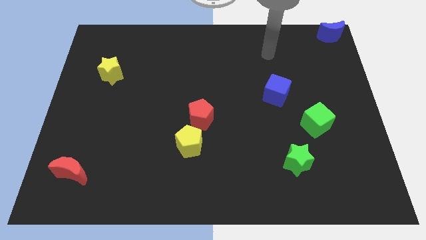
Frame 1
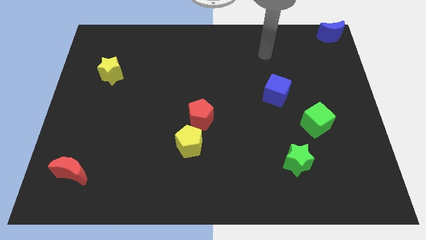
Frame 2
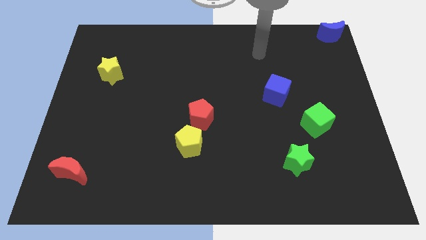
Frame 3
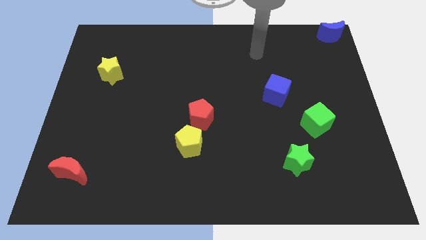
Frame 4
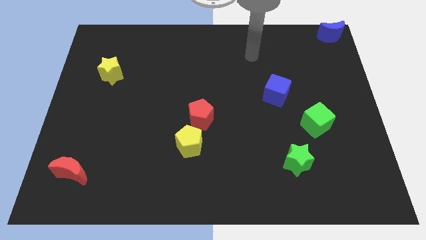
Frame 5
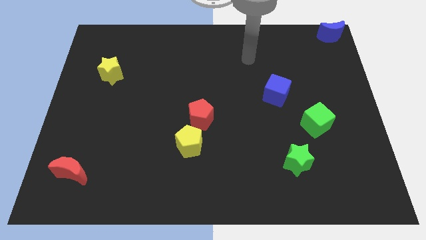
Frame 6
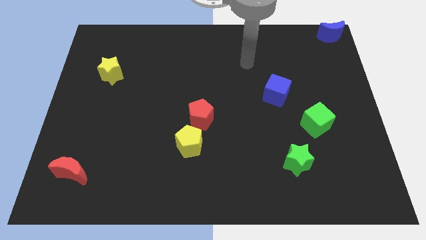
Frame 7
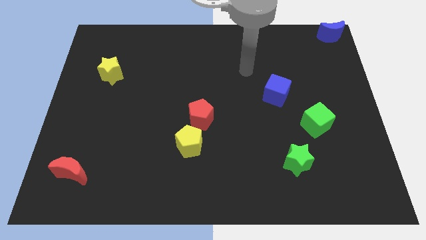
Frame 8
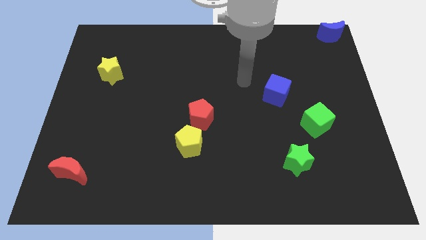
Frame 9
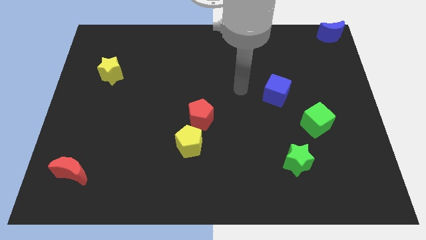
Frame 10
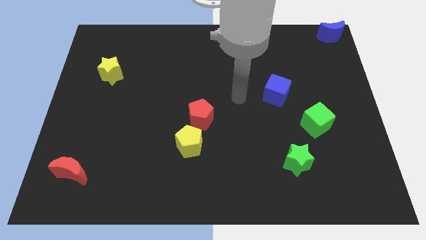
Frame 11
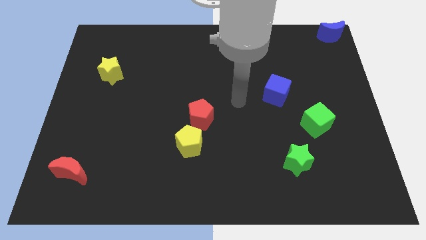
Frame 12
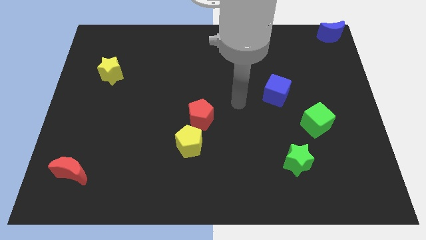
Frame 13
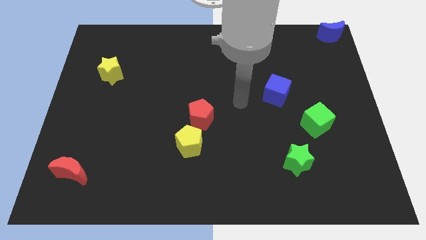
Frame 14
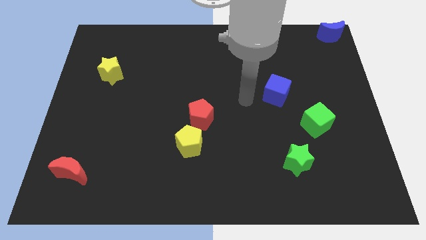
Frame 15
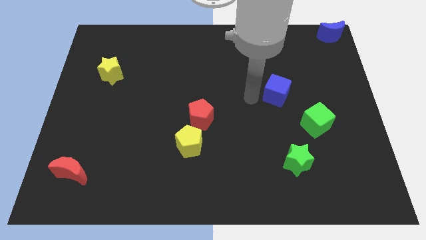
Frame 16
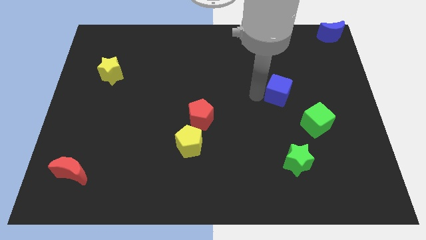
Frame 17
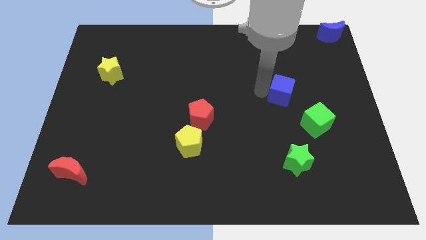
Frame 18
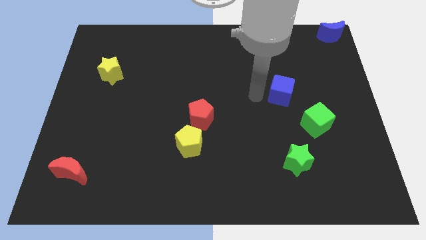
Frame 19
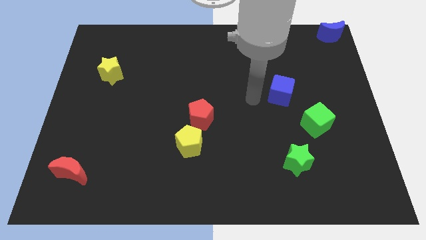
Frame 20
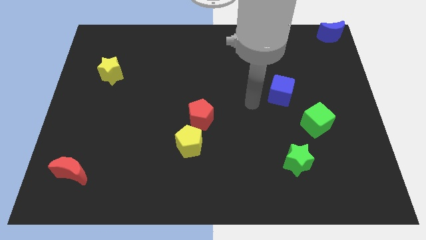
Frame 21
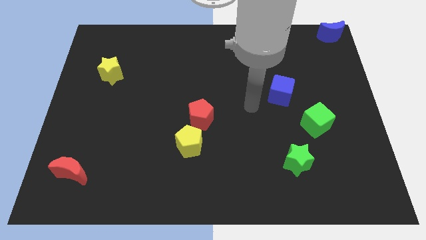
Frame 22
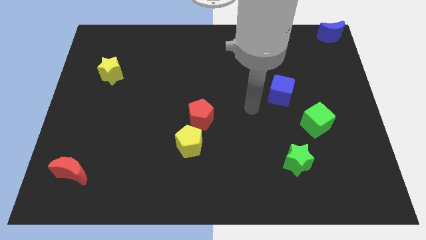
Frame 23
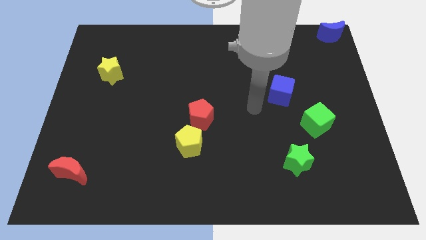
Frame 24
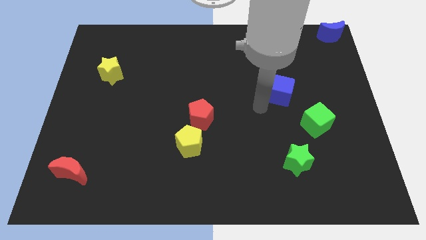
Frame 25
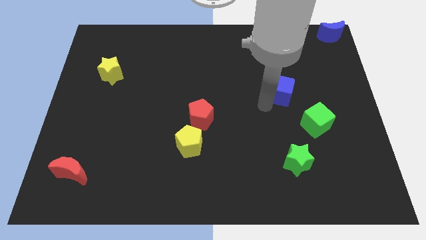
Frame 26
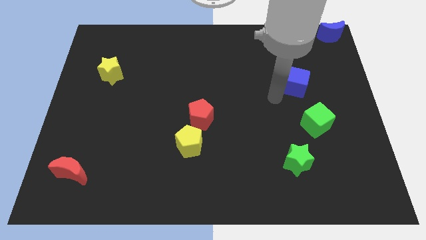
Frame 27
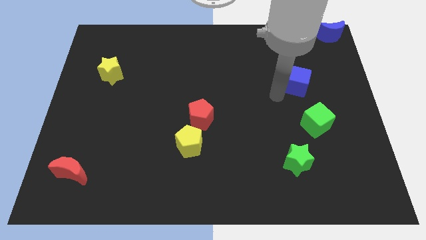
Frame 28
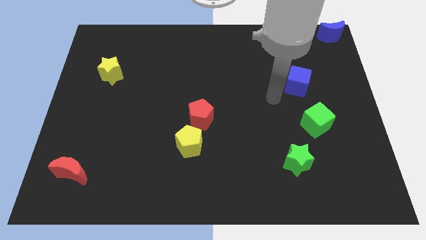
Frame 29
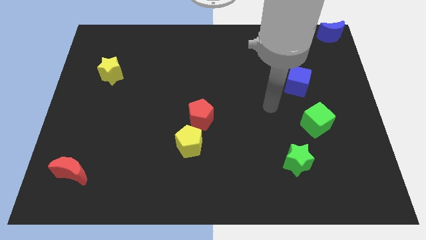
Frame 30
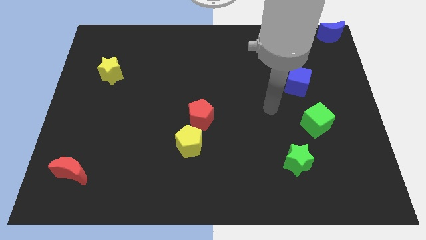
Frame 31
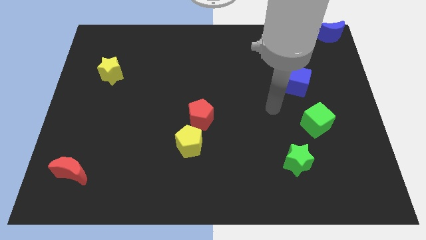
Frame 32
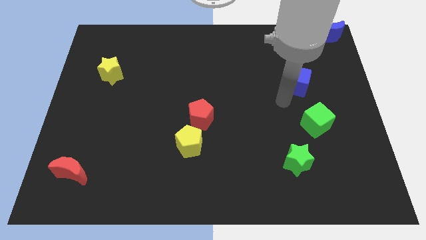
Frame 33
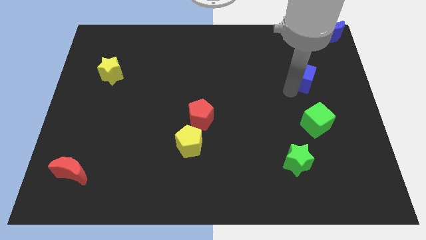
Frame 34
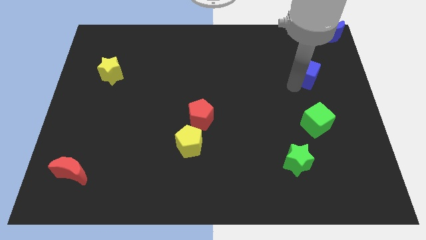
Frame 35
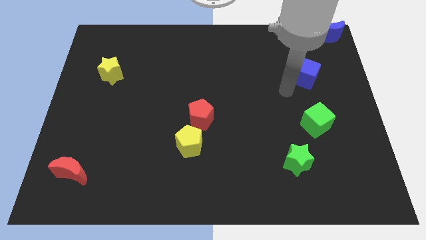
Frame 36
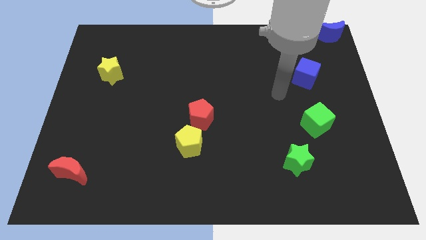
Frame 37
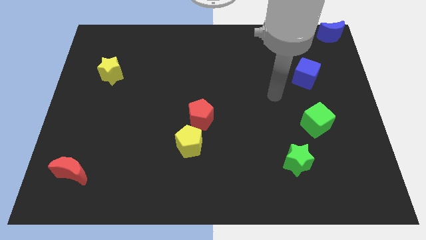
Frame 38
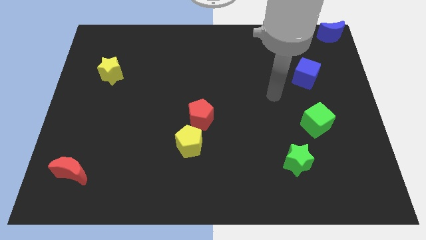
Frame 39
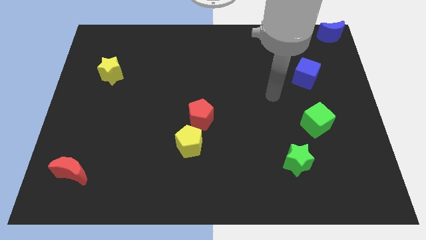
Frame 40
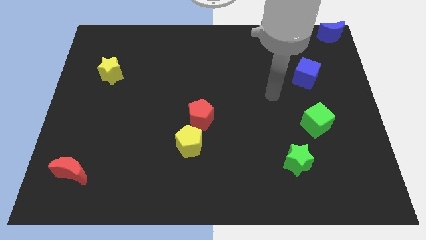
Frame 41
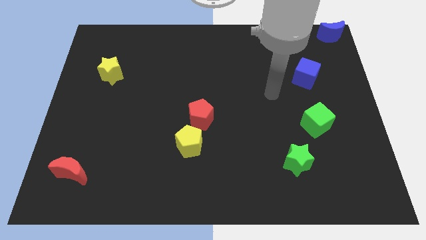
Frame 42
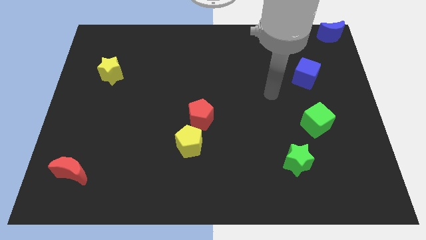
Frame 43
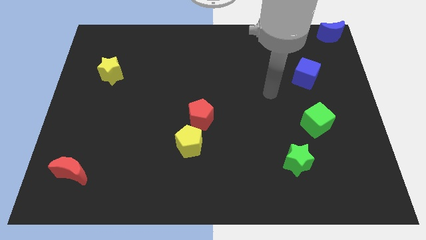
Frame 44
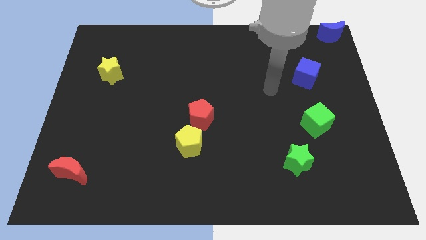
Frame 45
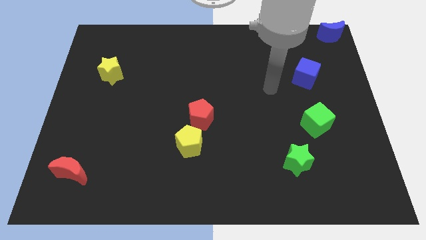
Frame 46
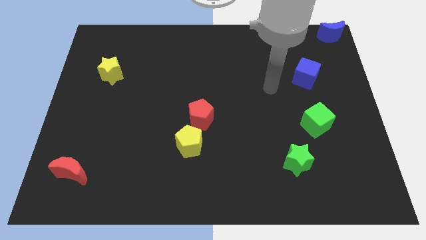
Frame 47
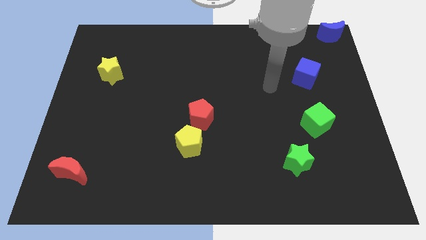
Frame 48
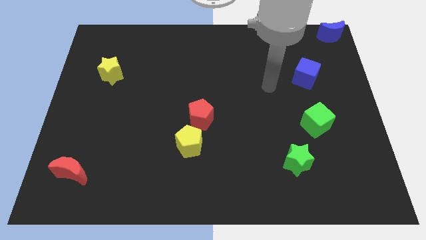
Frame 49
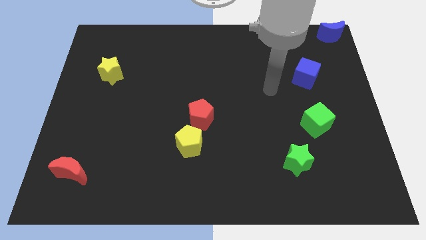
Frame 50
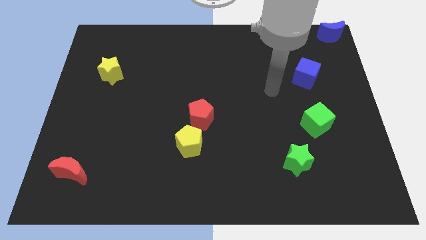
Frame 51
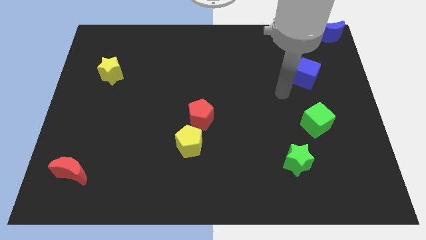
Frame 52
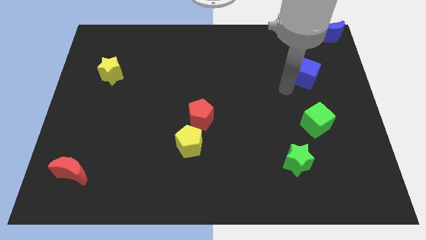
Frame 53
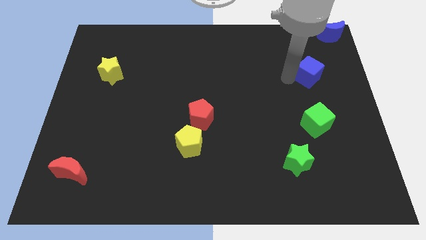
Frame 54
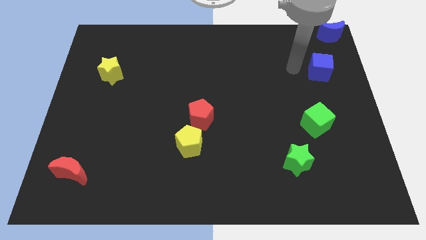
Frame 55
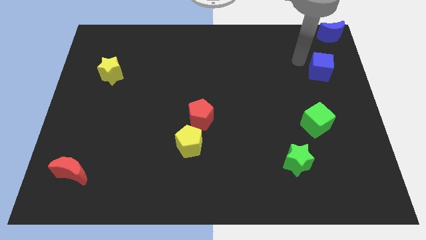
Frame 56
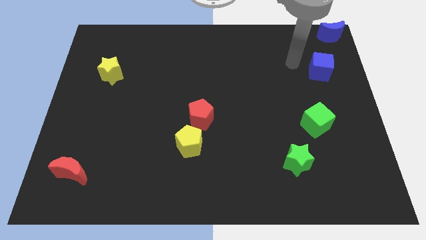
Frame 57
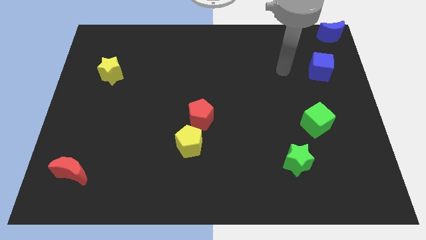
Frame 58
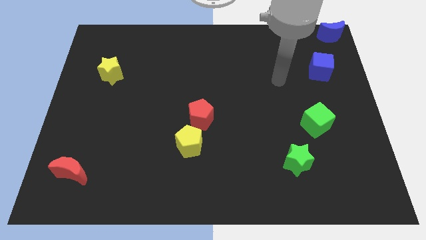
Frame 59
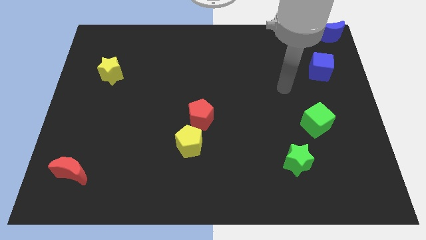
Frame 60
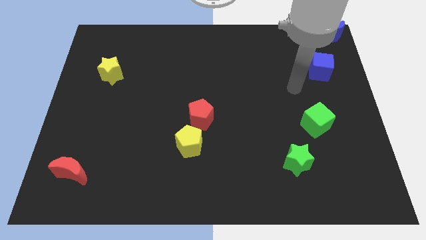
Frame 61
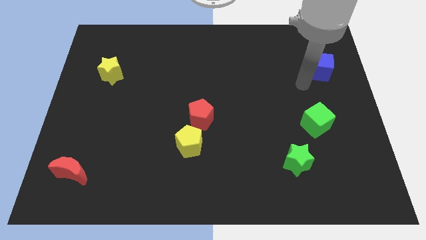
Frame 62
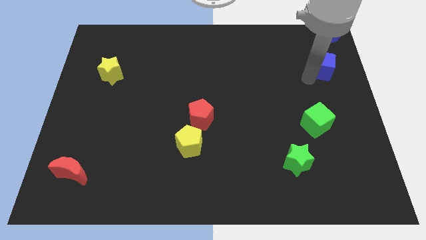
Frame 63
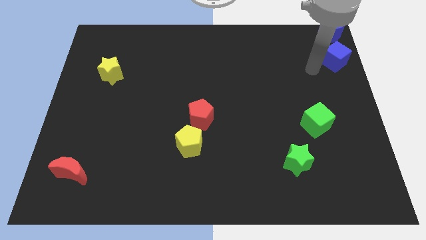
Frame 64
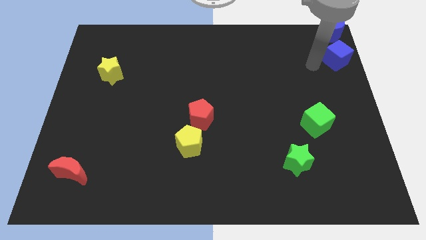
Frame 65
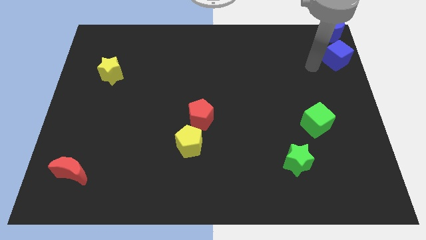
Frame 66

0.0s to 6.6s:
move the cube to the top right side of the board

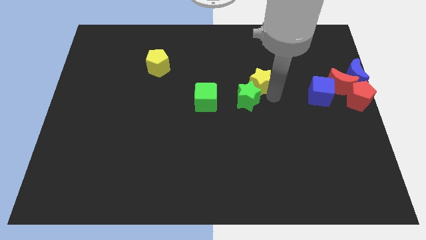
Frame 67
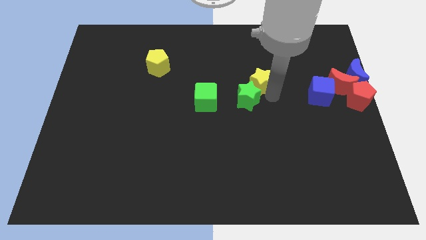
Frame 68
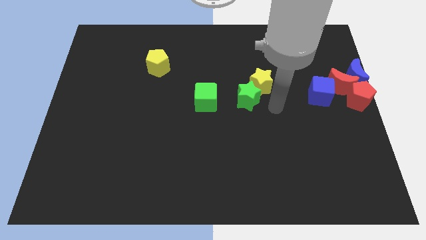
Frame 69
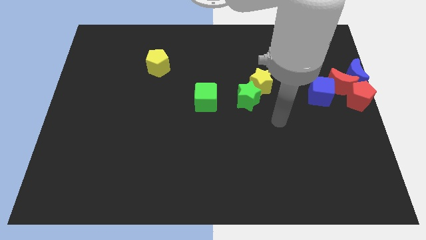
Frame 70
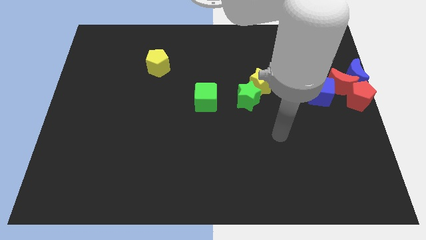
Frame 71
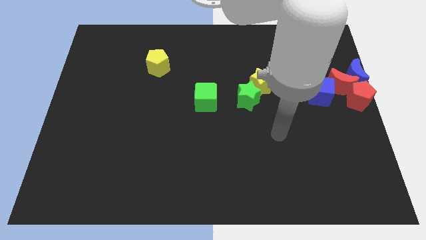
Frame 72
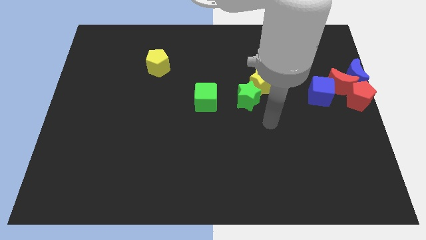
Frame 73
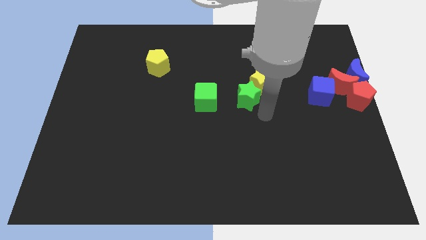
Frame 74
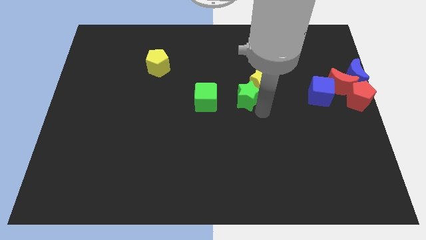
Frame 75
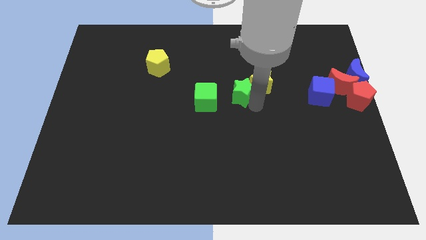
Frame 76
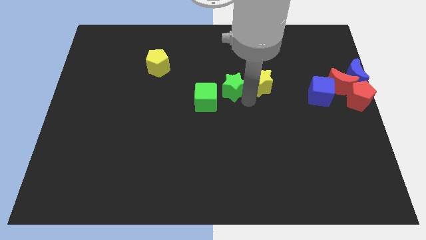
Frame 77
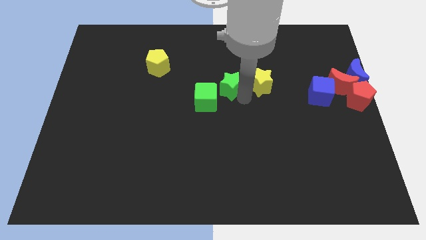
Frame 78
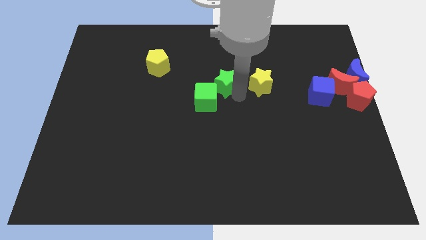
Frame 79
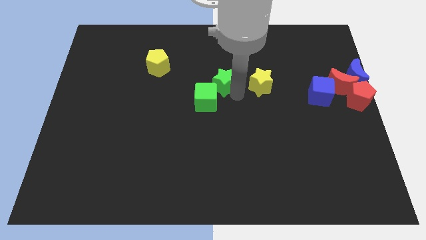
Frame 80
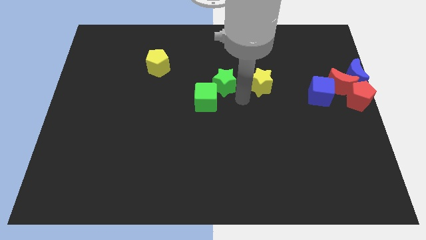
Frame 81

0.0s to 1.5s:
move the green star to the diagonally right to the green cube

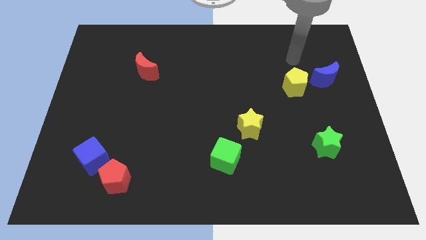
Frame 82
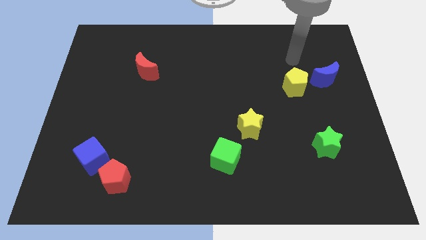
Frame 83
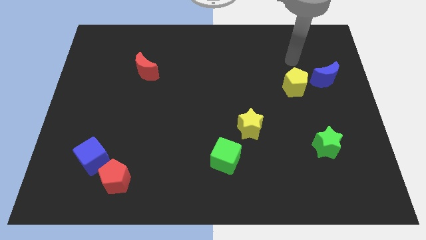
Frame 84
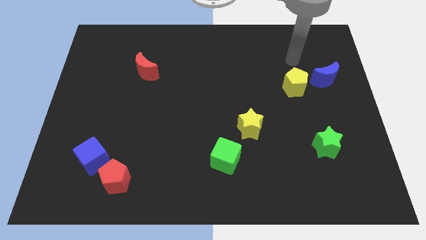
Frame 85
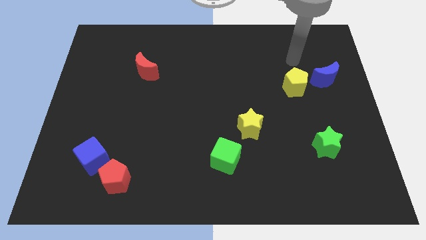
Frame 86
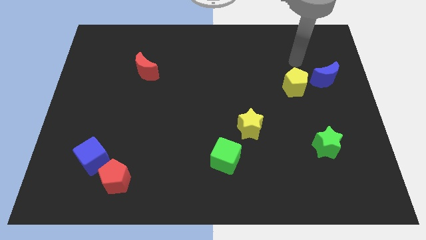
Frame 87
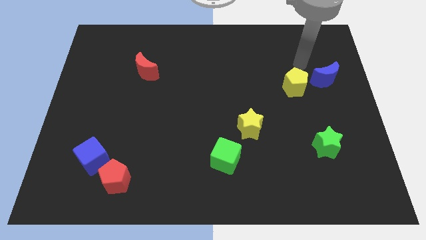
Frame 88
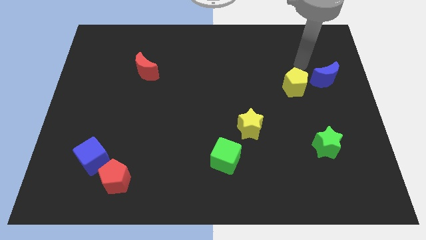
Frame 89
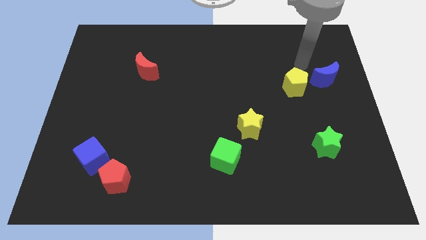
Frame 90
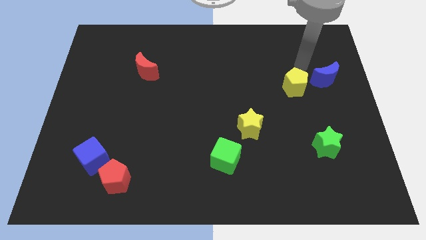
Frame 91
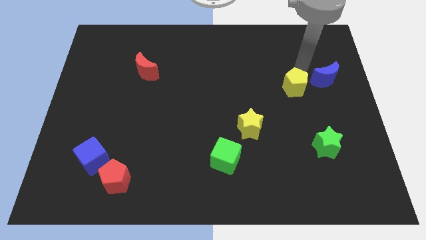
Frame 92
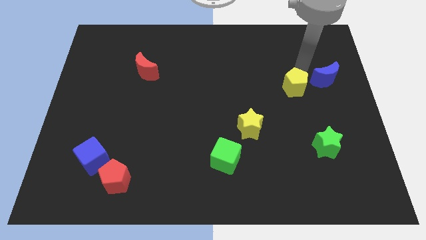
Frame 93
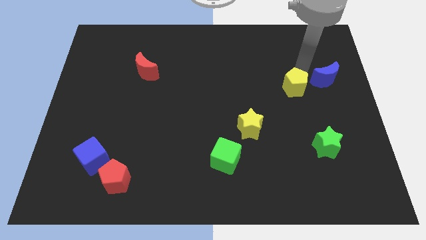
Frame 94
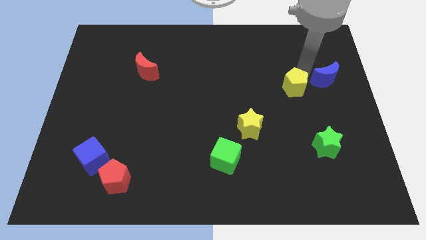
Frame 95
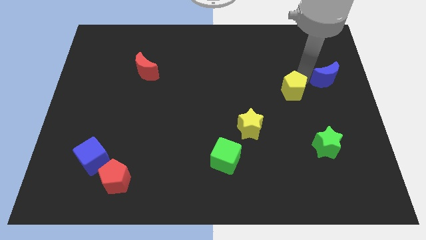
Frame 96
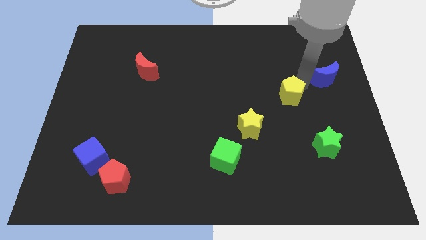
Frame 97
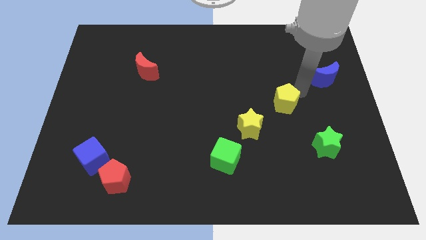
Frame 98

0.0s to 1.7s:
slightly push the yellow pentagon to the bottom of the board
